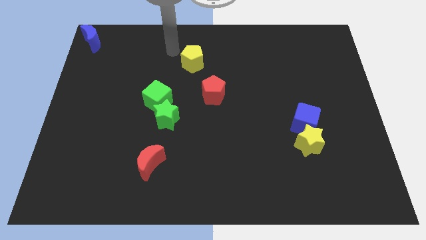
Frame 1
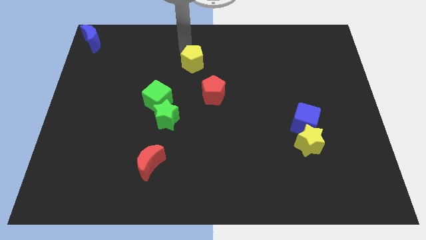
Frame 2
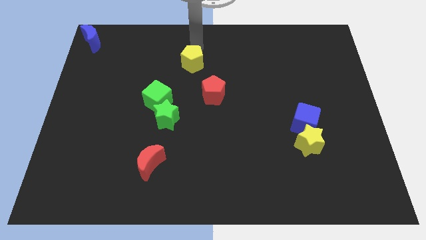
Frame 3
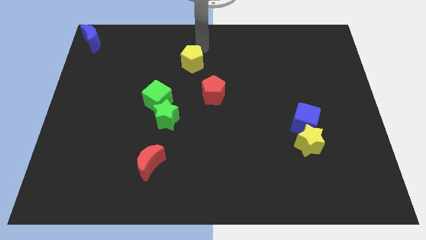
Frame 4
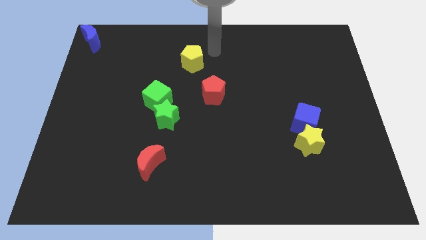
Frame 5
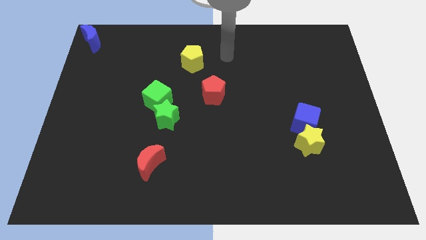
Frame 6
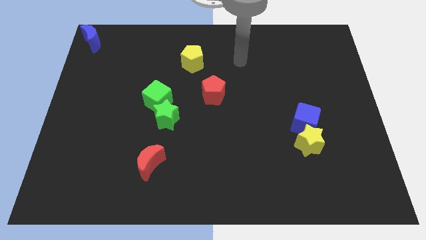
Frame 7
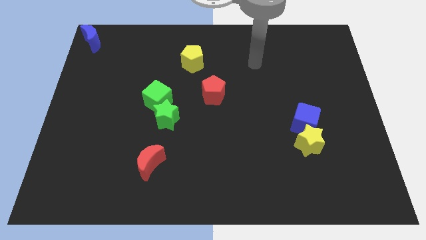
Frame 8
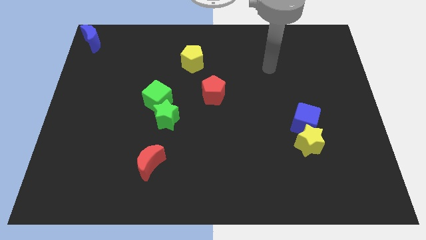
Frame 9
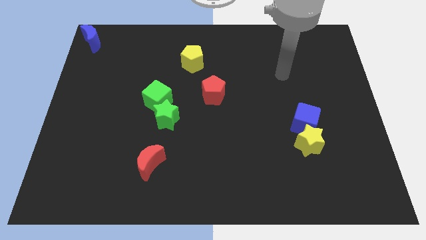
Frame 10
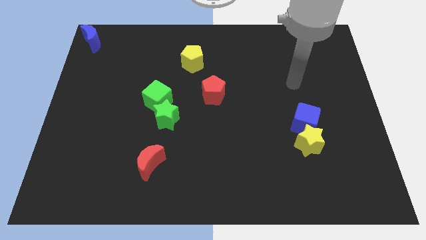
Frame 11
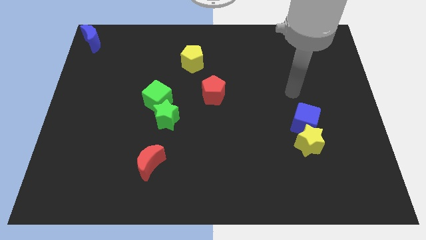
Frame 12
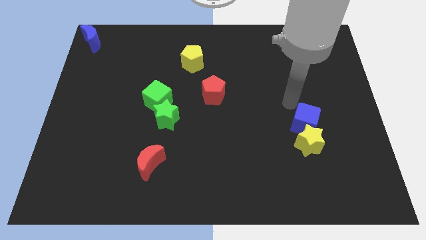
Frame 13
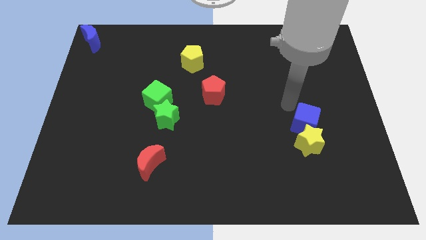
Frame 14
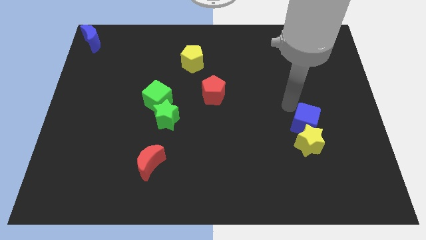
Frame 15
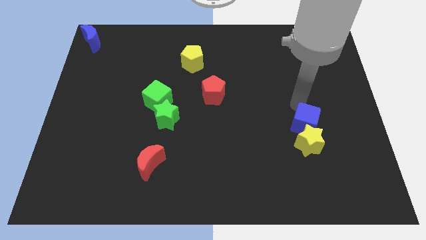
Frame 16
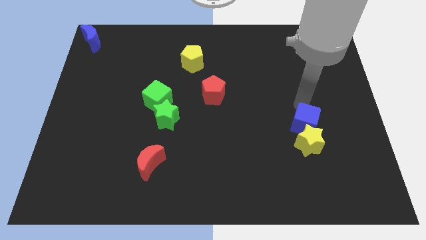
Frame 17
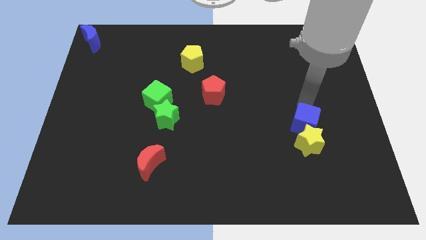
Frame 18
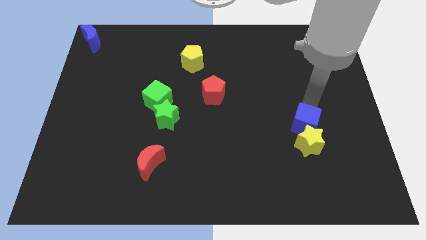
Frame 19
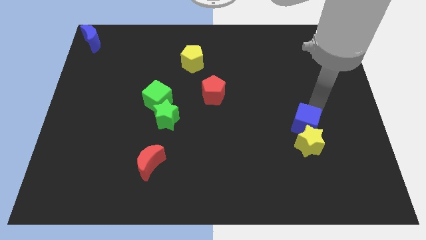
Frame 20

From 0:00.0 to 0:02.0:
touch the top side of the blue cube

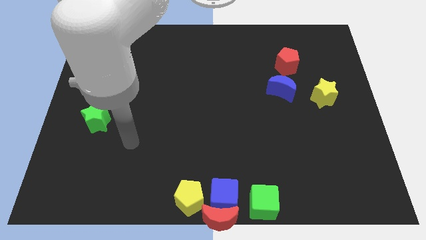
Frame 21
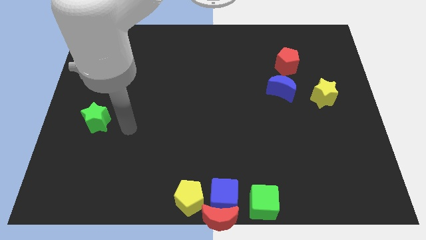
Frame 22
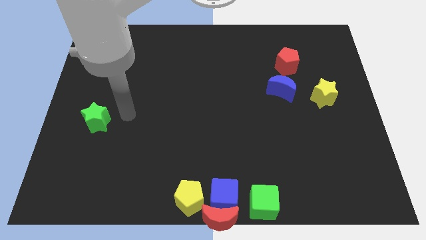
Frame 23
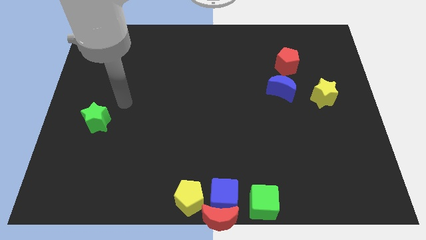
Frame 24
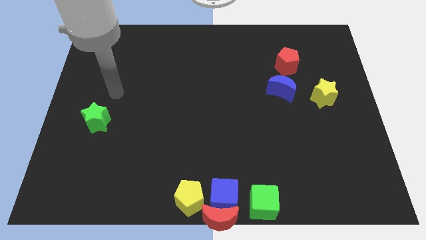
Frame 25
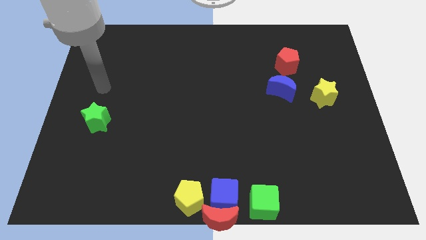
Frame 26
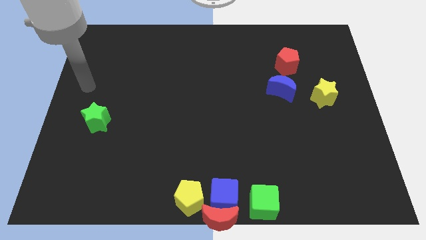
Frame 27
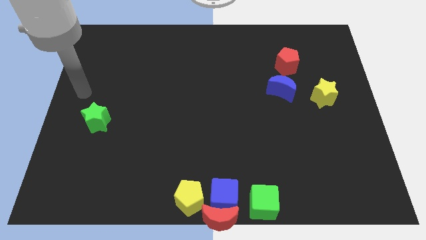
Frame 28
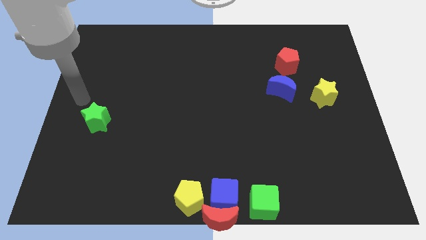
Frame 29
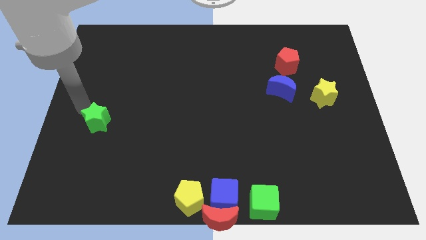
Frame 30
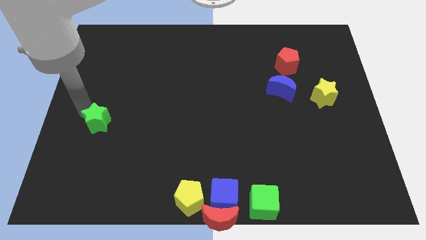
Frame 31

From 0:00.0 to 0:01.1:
move the arm left to the green star

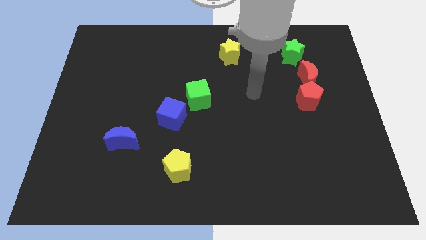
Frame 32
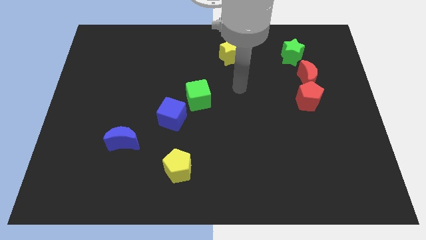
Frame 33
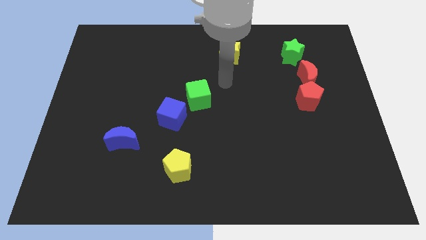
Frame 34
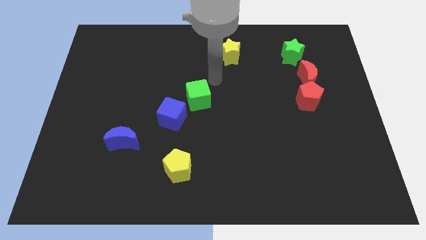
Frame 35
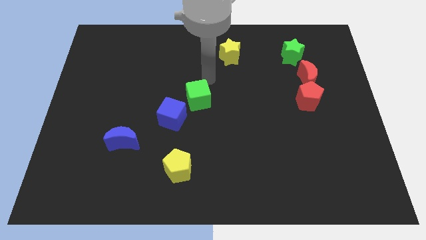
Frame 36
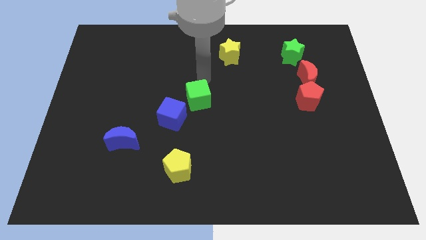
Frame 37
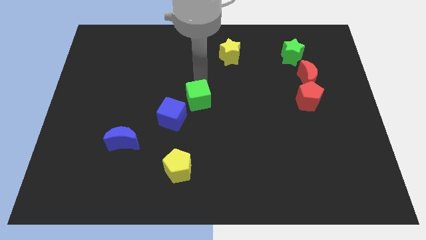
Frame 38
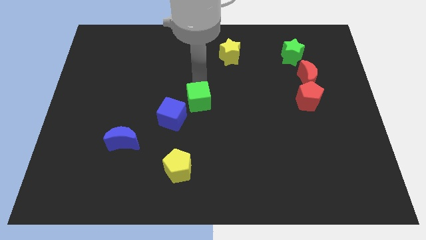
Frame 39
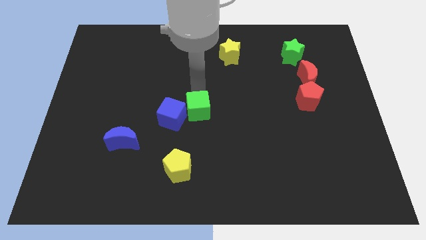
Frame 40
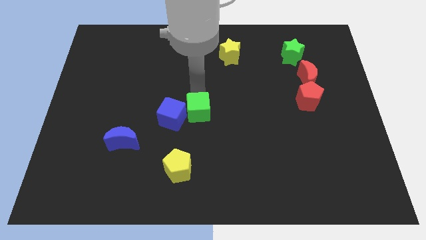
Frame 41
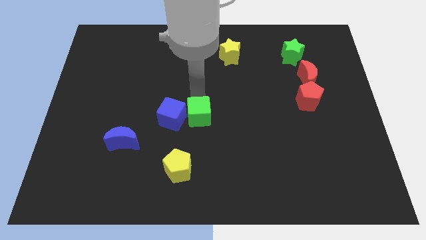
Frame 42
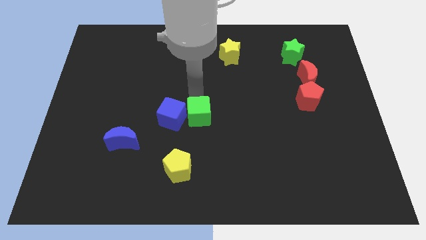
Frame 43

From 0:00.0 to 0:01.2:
move the green cube parallel to the right side of the blue cube

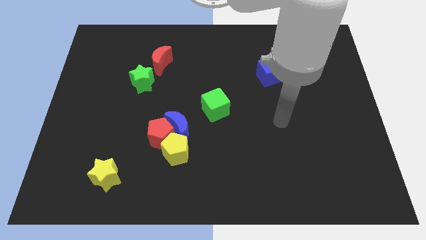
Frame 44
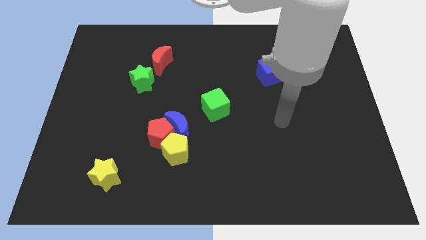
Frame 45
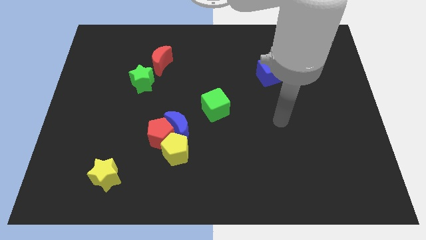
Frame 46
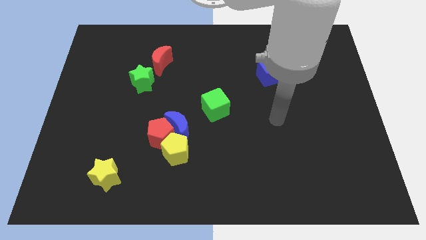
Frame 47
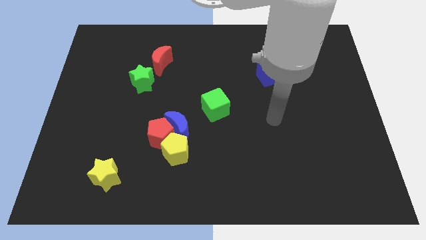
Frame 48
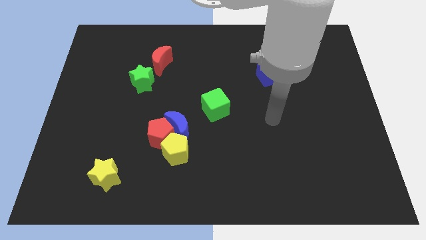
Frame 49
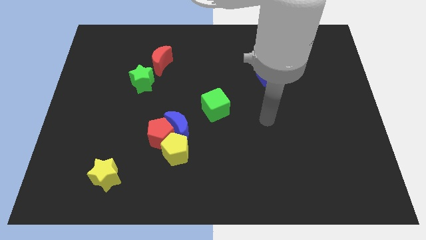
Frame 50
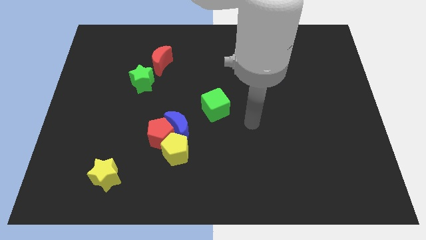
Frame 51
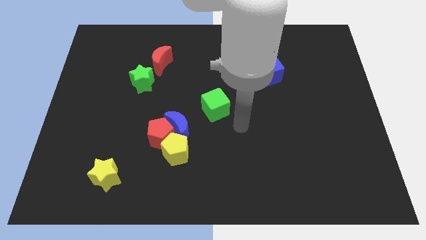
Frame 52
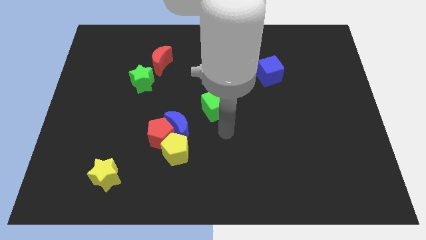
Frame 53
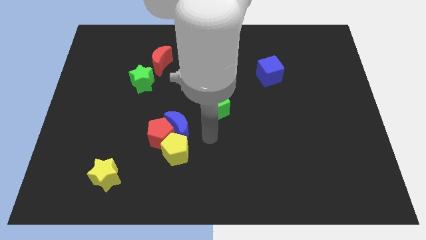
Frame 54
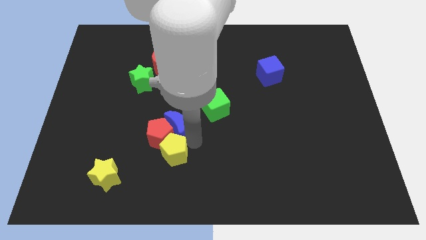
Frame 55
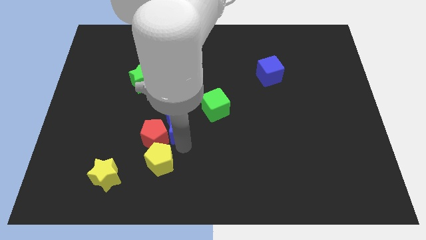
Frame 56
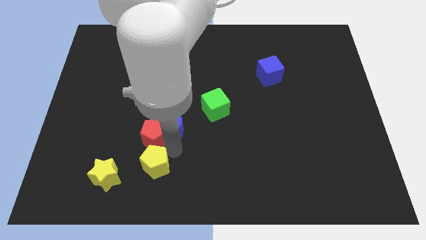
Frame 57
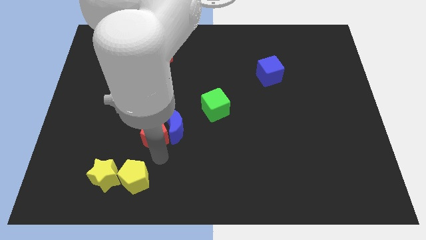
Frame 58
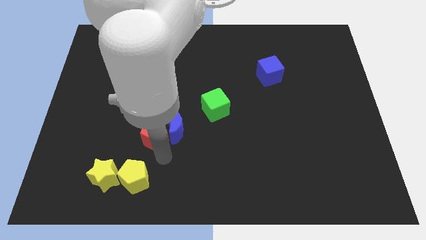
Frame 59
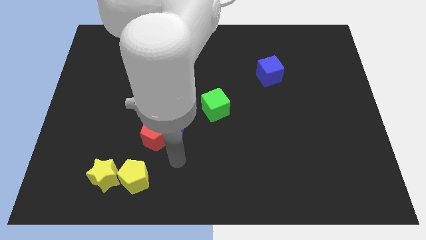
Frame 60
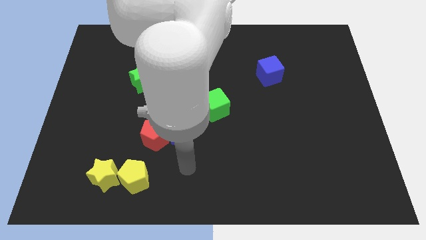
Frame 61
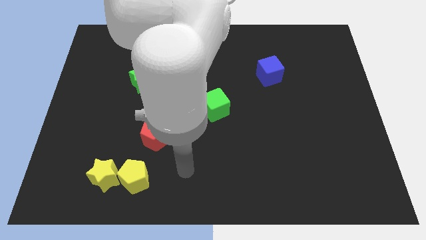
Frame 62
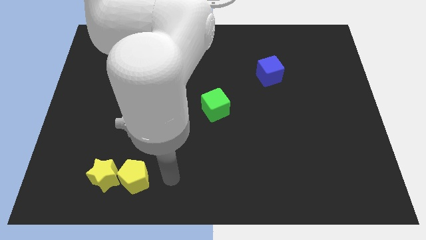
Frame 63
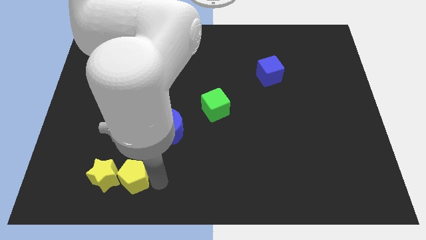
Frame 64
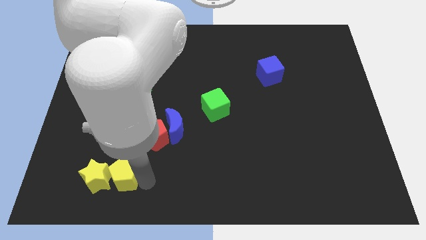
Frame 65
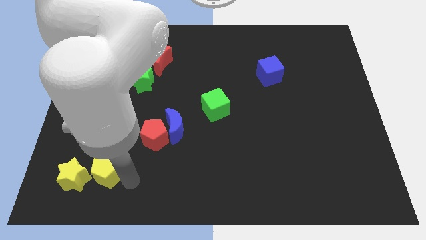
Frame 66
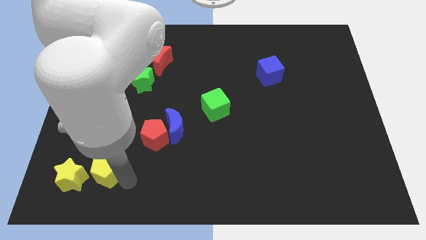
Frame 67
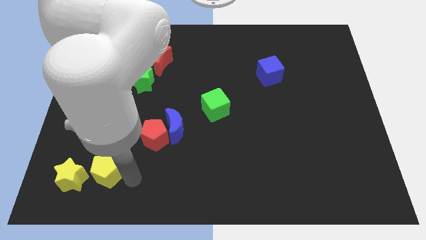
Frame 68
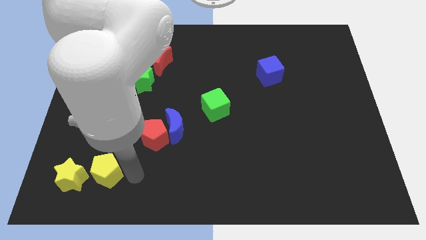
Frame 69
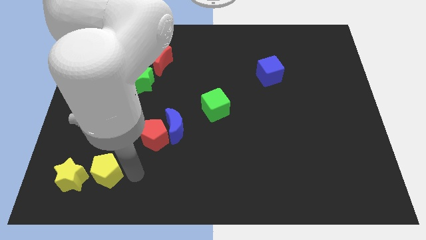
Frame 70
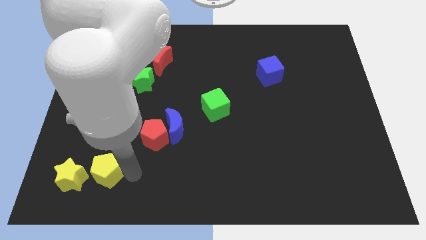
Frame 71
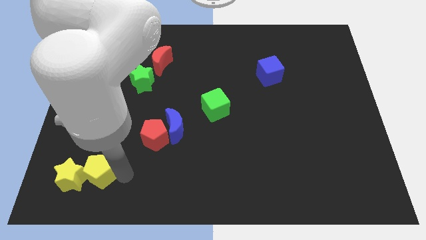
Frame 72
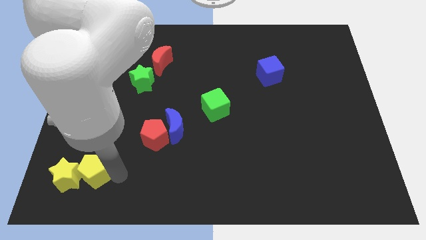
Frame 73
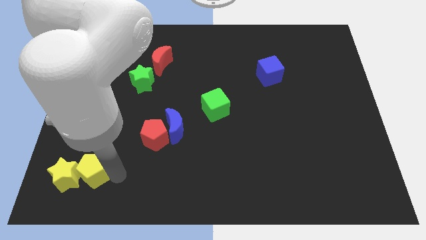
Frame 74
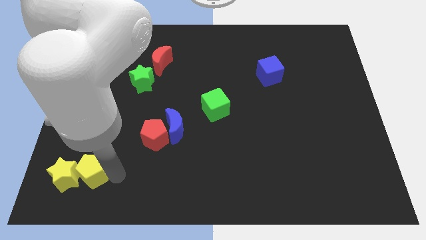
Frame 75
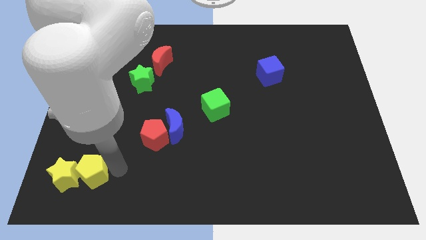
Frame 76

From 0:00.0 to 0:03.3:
push the yellow pentagon into the yellow star

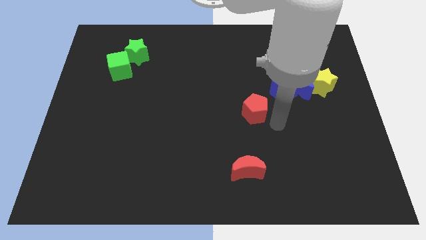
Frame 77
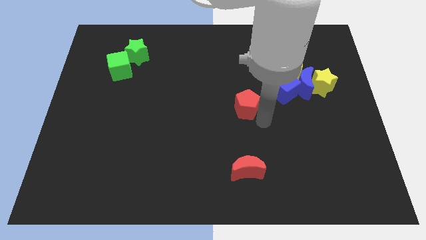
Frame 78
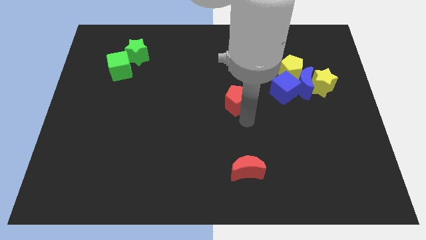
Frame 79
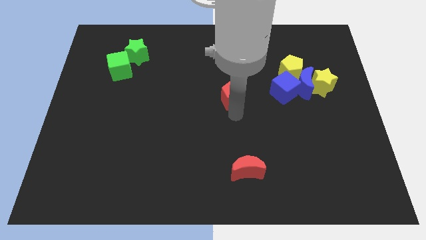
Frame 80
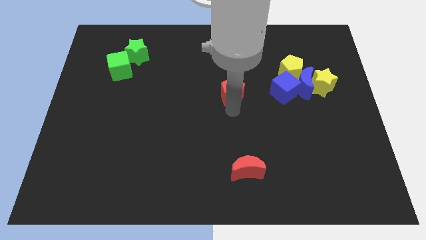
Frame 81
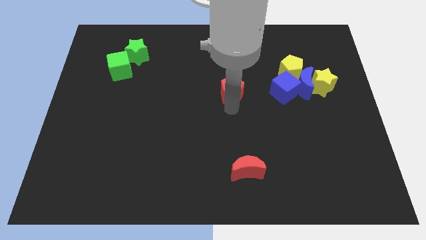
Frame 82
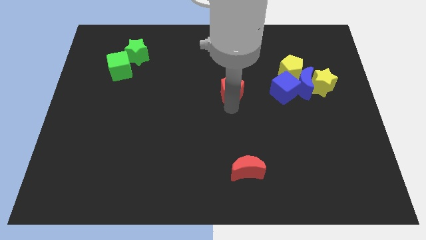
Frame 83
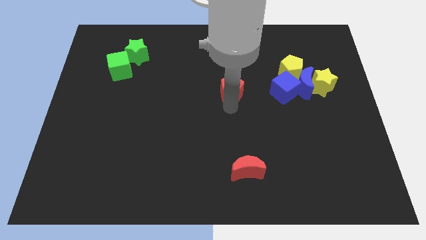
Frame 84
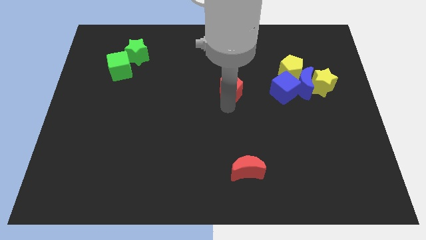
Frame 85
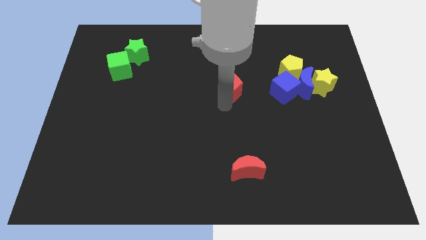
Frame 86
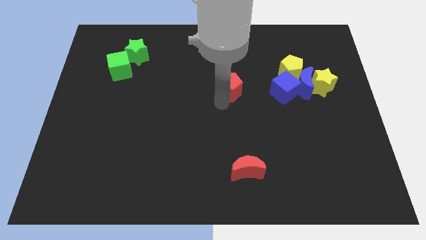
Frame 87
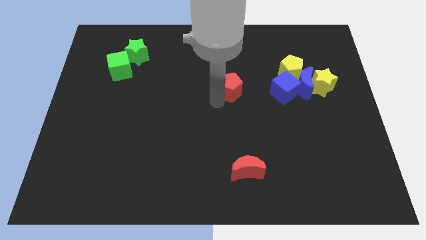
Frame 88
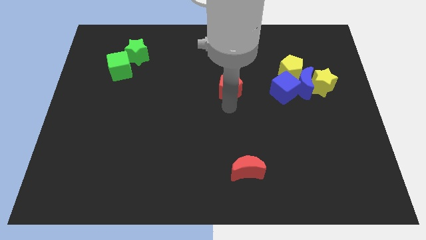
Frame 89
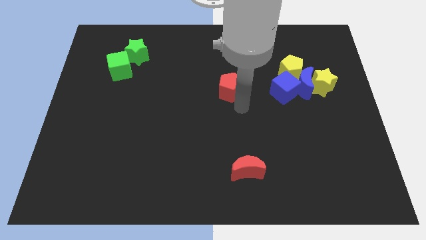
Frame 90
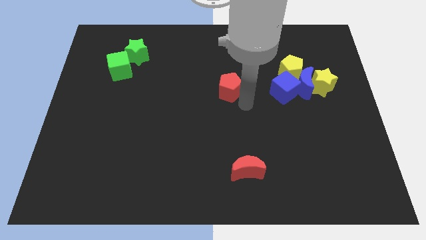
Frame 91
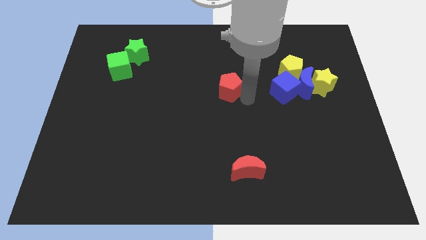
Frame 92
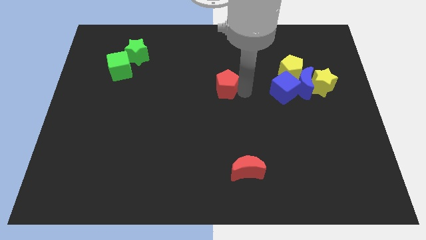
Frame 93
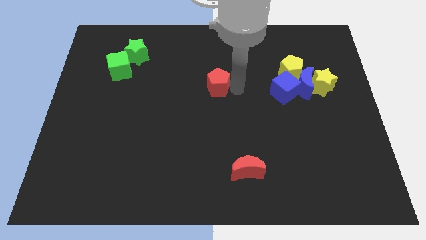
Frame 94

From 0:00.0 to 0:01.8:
place the red pentagon at the center of the board
